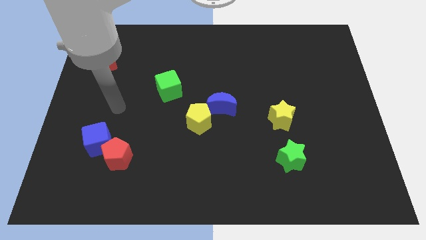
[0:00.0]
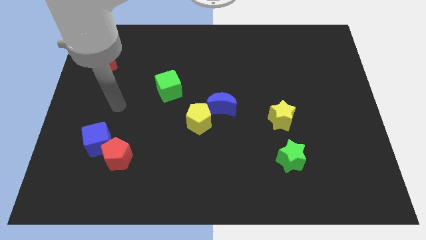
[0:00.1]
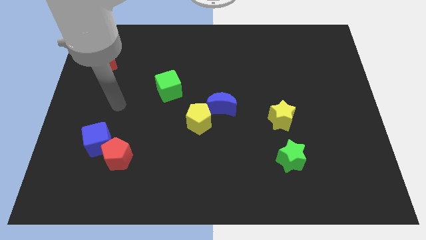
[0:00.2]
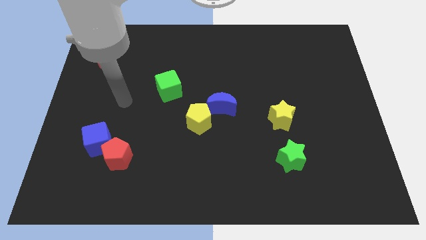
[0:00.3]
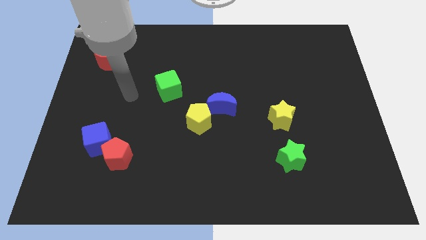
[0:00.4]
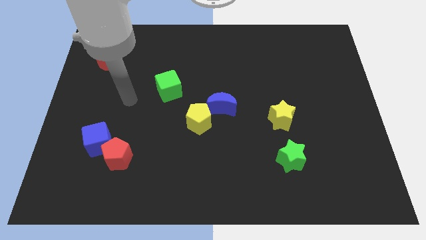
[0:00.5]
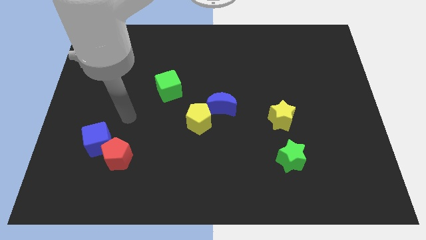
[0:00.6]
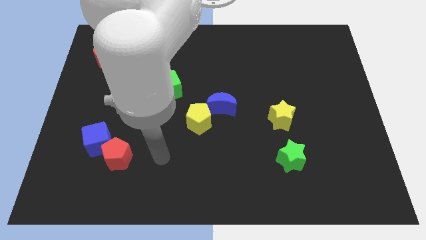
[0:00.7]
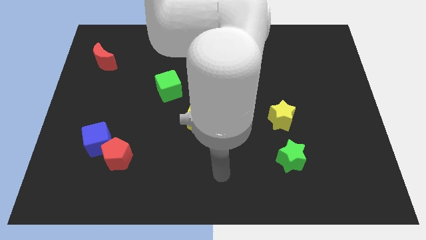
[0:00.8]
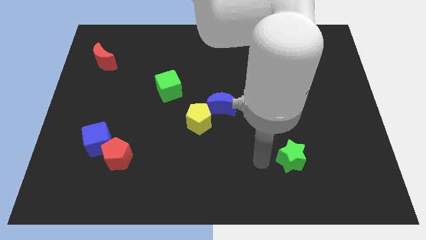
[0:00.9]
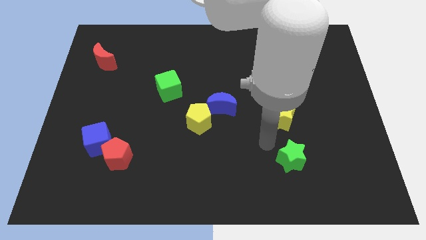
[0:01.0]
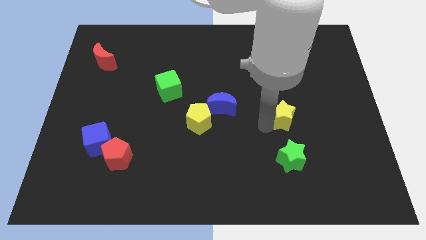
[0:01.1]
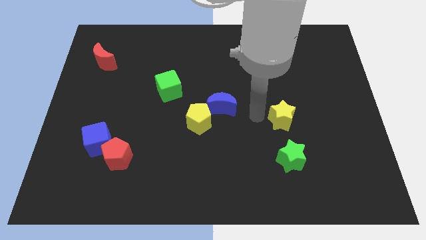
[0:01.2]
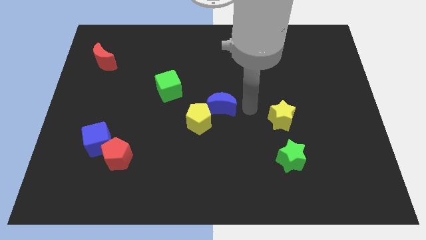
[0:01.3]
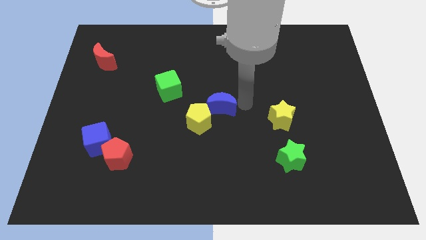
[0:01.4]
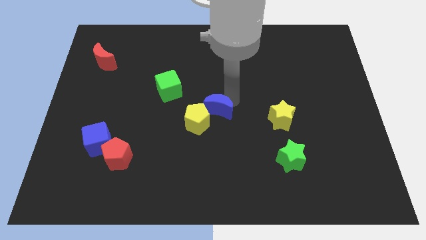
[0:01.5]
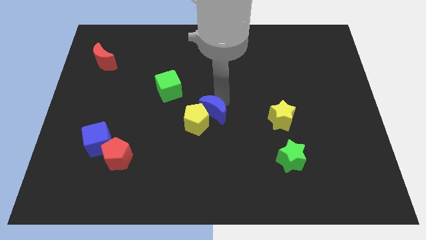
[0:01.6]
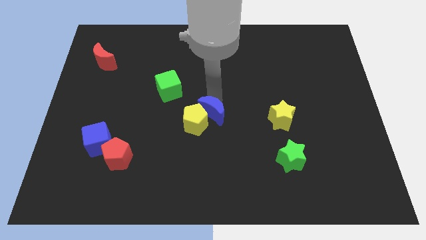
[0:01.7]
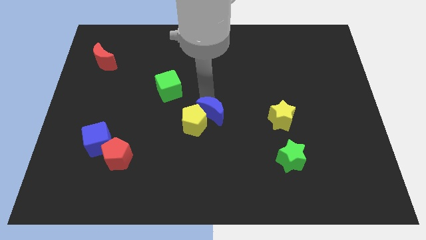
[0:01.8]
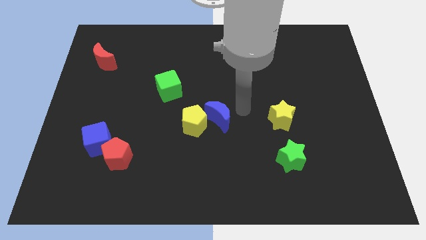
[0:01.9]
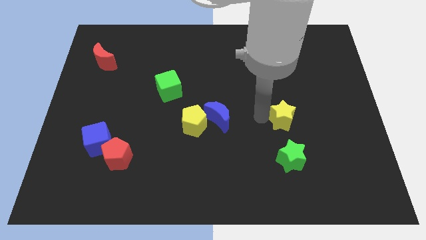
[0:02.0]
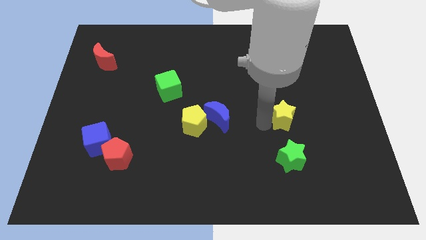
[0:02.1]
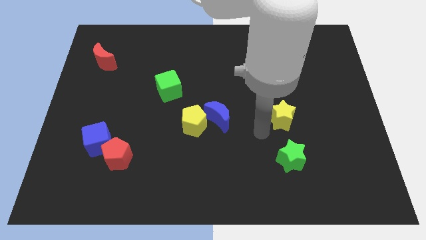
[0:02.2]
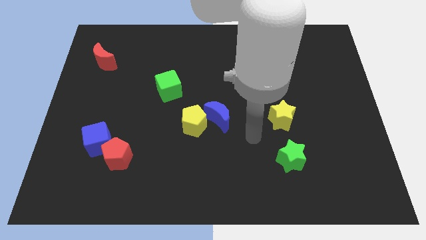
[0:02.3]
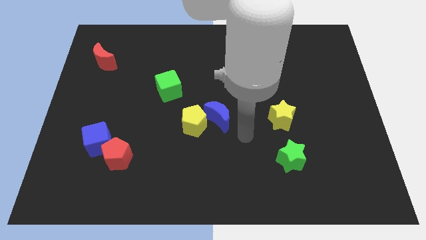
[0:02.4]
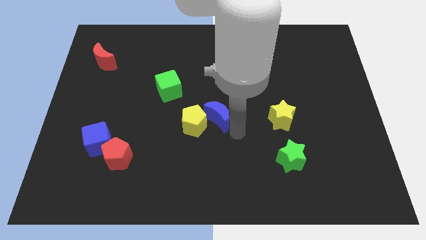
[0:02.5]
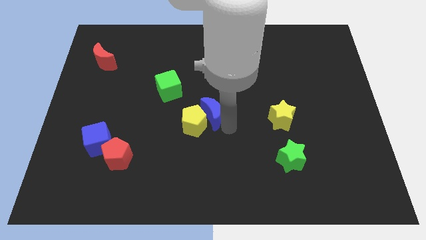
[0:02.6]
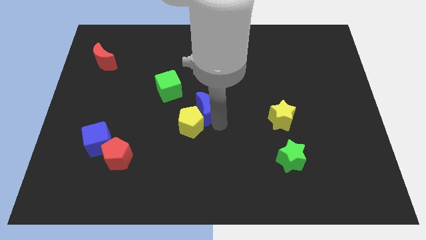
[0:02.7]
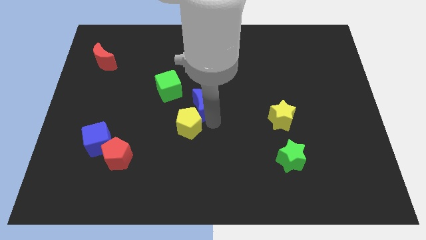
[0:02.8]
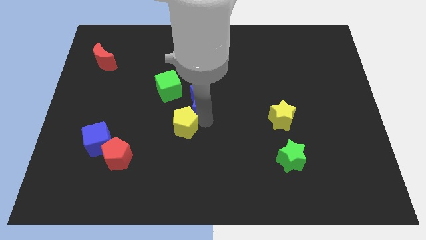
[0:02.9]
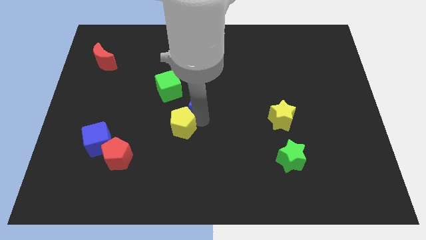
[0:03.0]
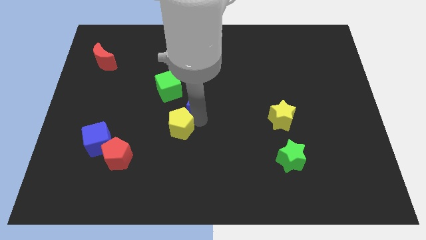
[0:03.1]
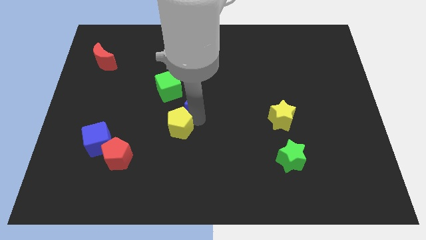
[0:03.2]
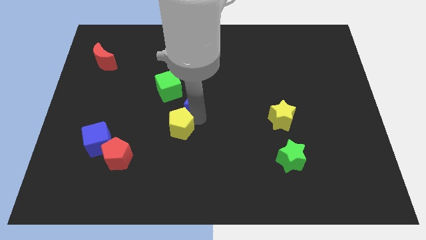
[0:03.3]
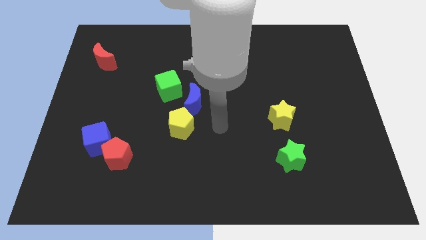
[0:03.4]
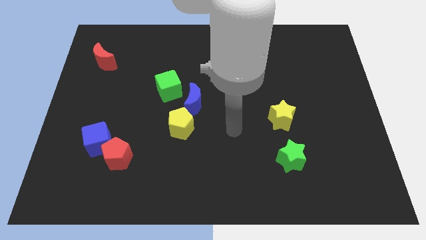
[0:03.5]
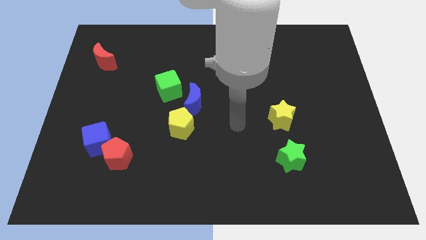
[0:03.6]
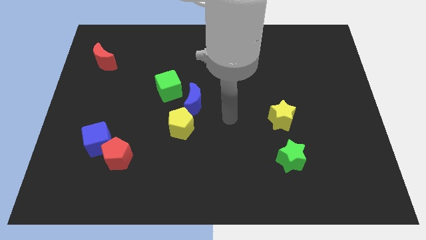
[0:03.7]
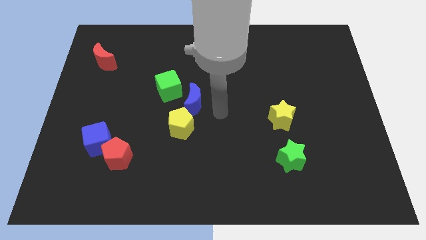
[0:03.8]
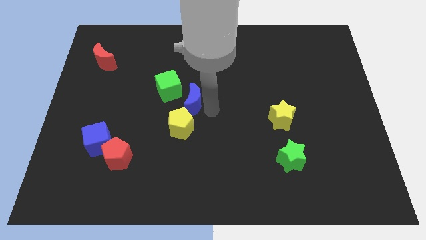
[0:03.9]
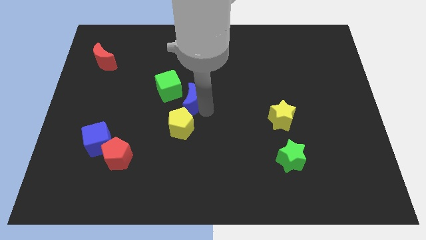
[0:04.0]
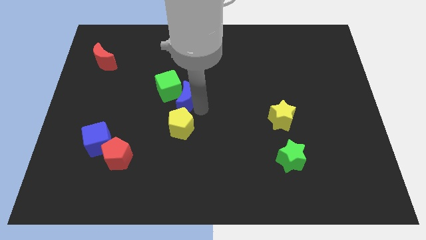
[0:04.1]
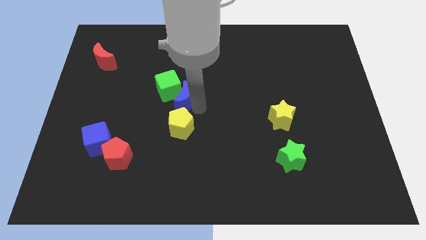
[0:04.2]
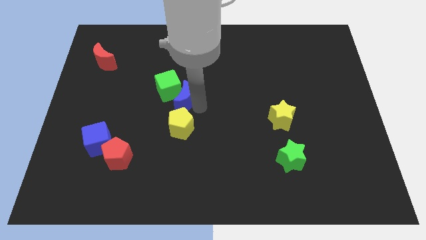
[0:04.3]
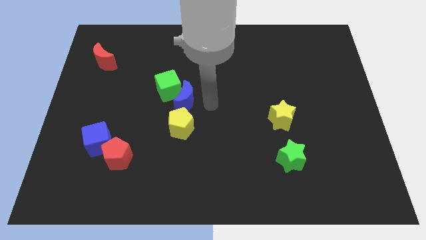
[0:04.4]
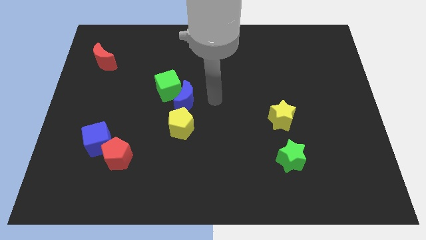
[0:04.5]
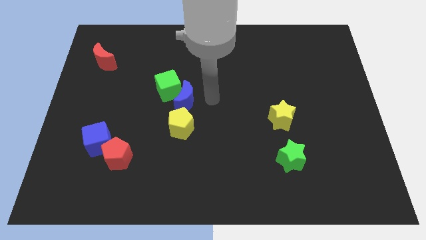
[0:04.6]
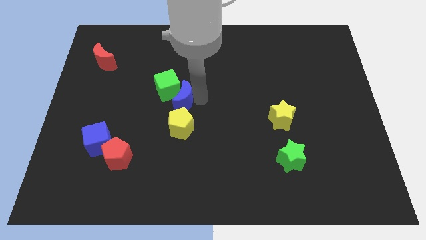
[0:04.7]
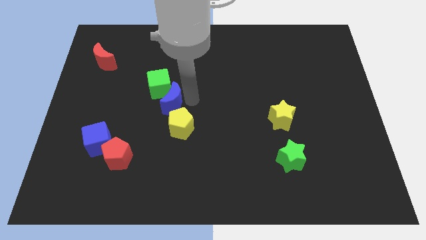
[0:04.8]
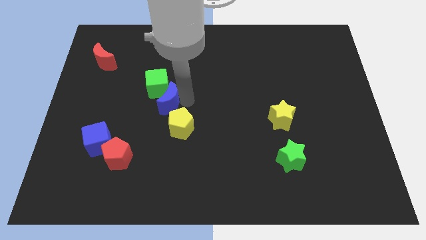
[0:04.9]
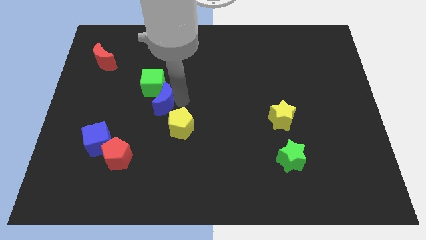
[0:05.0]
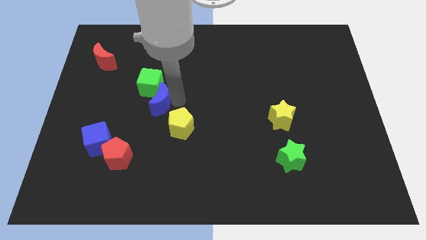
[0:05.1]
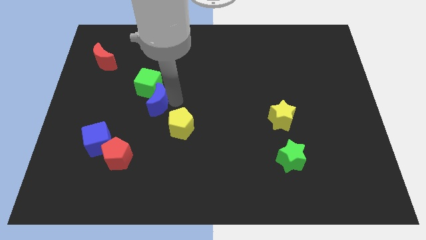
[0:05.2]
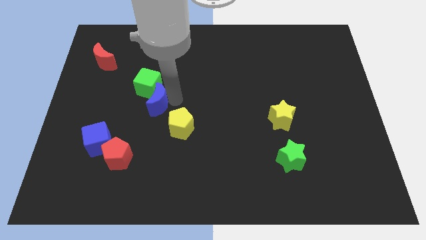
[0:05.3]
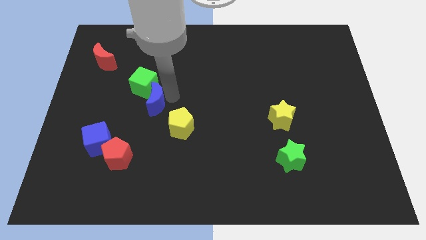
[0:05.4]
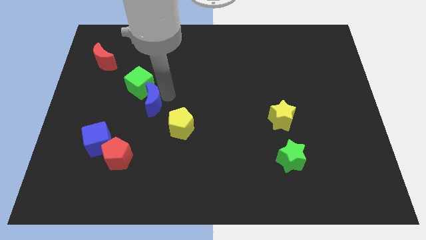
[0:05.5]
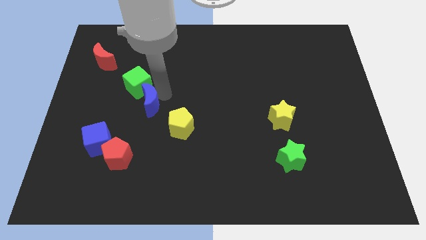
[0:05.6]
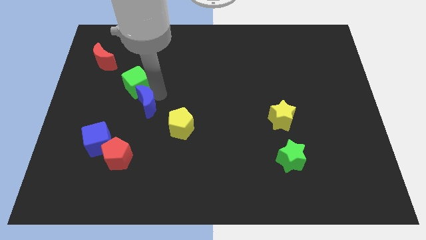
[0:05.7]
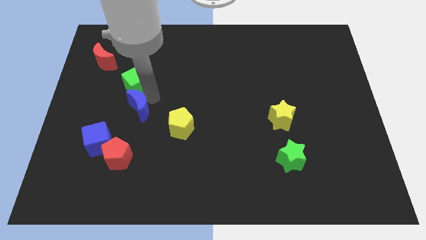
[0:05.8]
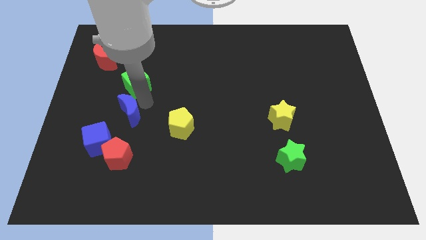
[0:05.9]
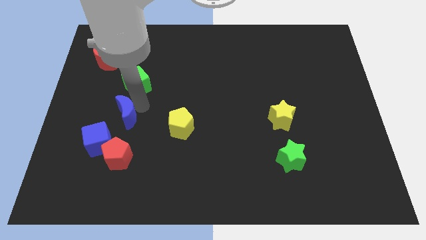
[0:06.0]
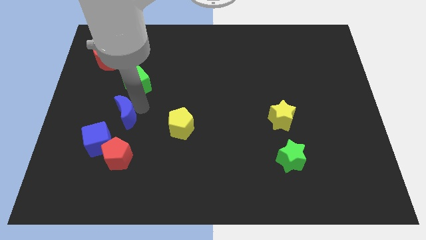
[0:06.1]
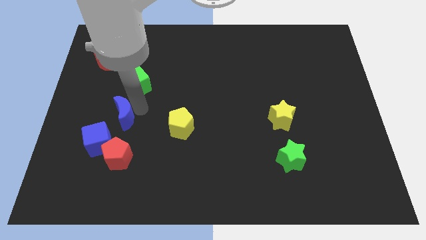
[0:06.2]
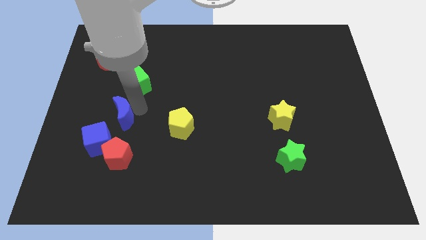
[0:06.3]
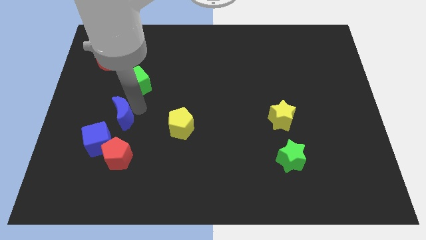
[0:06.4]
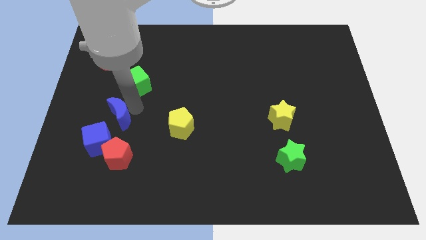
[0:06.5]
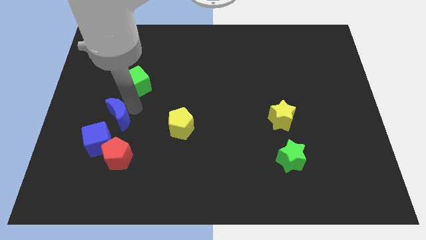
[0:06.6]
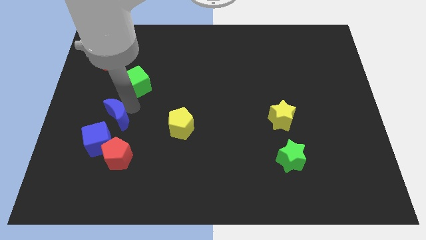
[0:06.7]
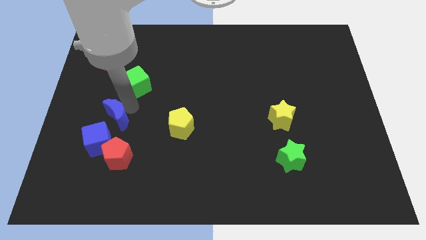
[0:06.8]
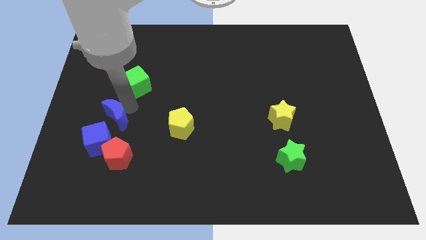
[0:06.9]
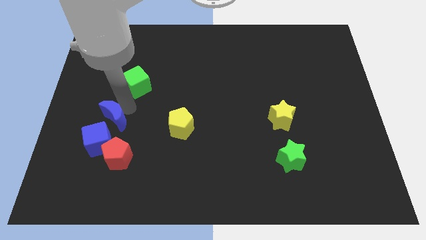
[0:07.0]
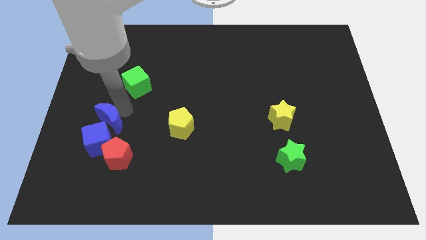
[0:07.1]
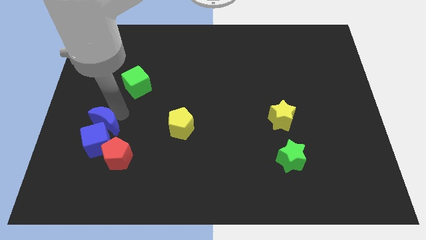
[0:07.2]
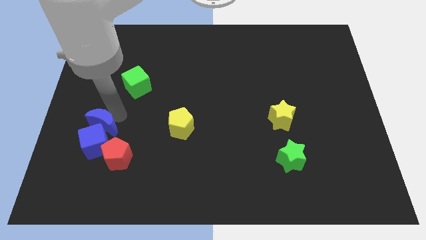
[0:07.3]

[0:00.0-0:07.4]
slide the blue moon to the blue cube

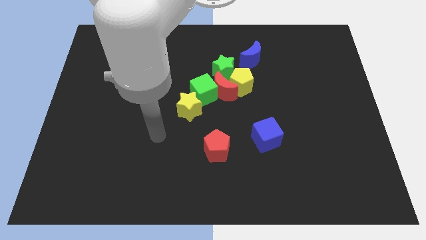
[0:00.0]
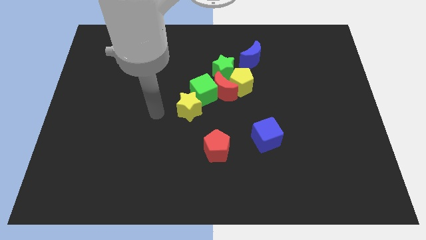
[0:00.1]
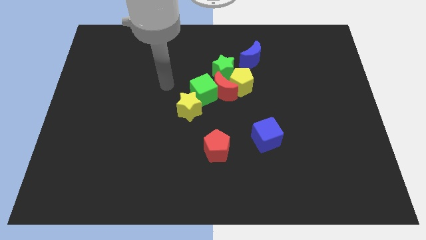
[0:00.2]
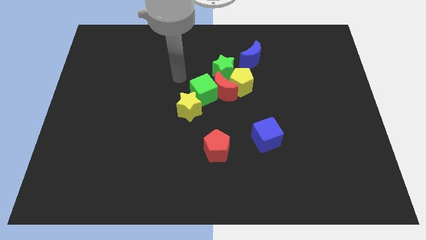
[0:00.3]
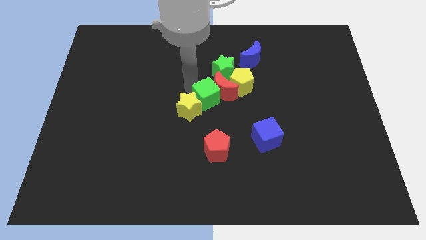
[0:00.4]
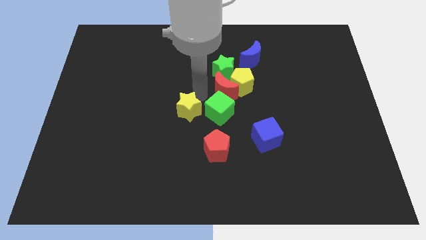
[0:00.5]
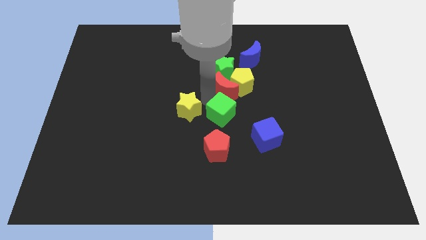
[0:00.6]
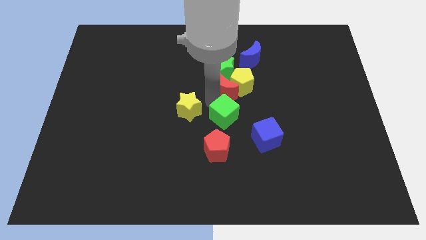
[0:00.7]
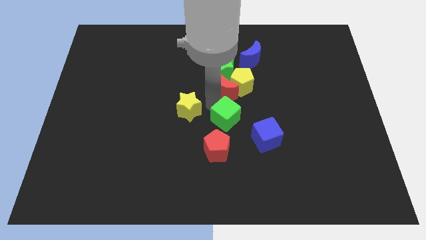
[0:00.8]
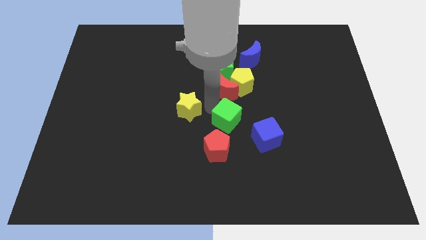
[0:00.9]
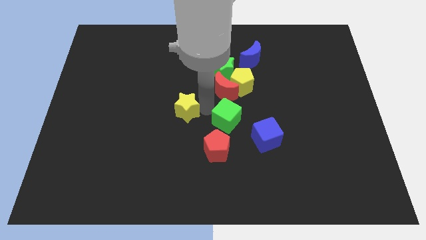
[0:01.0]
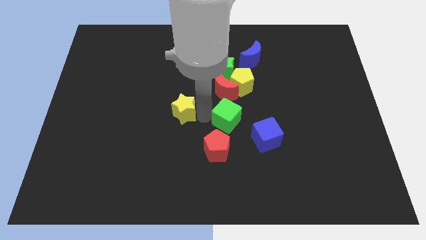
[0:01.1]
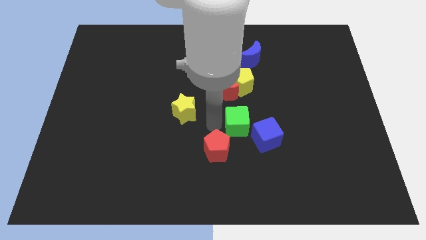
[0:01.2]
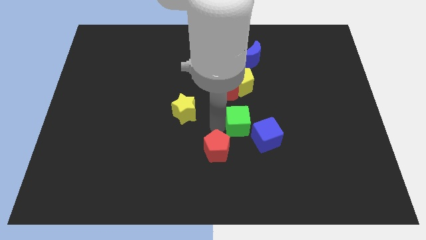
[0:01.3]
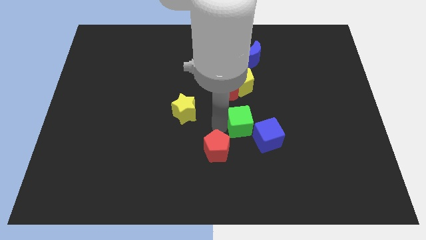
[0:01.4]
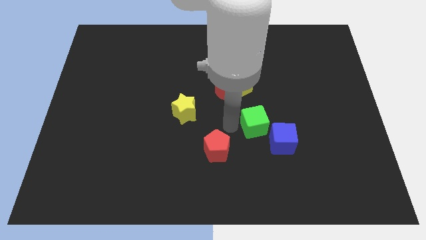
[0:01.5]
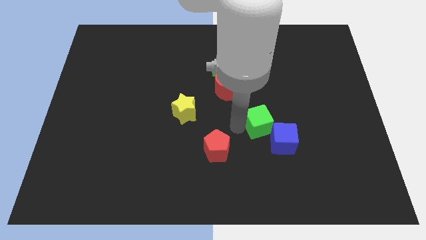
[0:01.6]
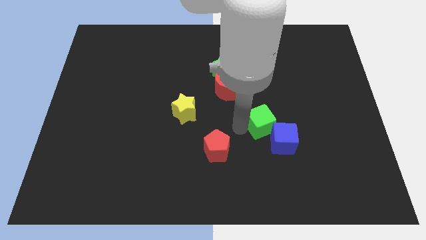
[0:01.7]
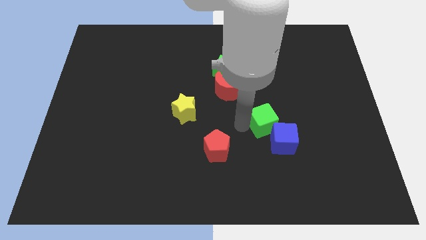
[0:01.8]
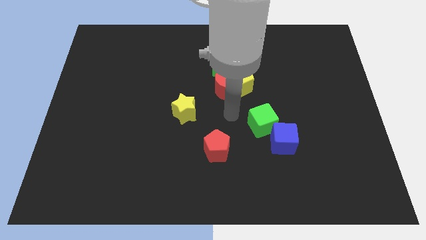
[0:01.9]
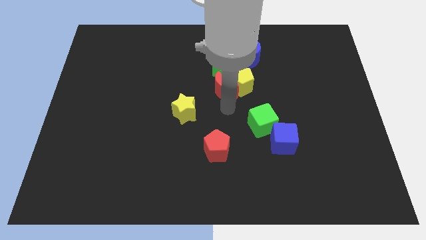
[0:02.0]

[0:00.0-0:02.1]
move the green cube towards the blue cube
